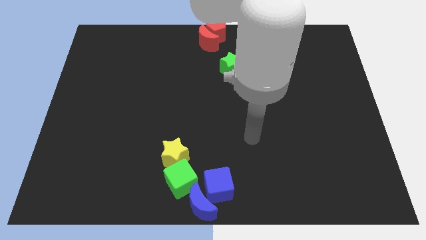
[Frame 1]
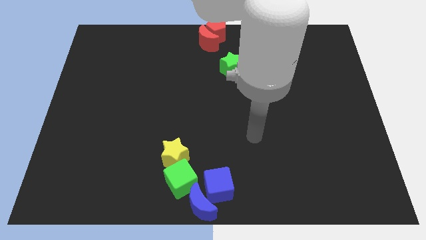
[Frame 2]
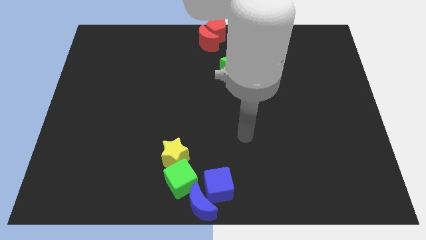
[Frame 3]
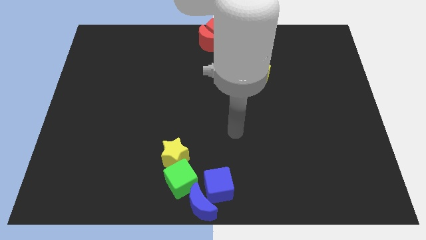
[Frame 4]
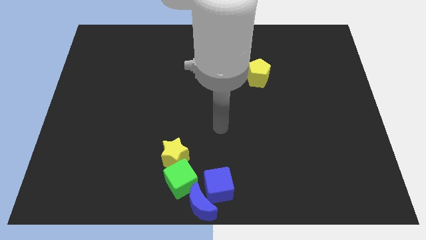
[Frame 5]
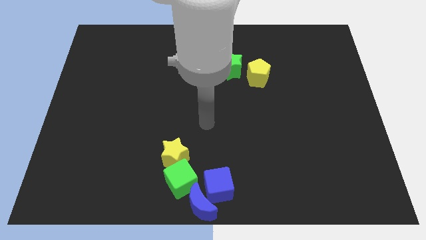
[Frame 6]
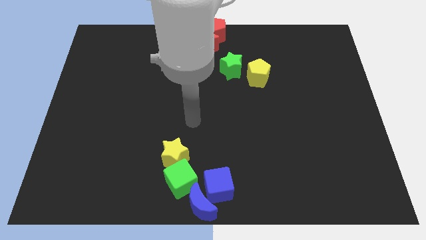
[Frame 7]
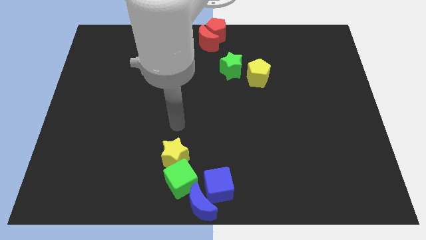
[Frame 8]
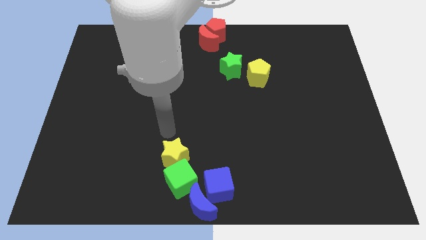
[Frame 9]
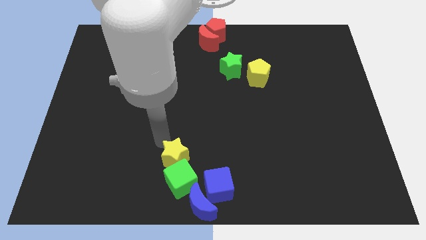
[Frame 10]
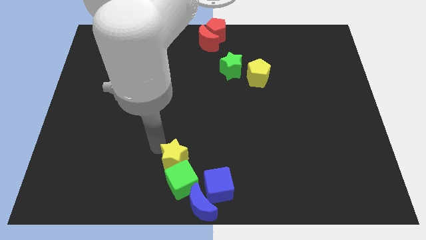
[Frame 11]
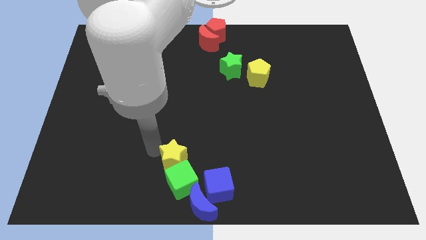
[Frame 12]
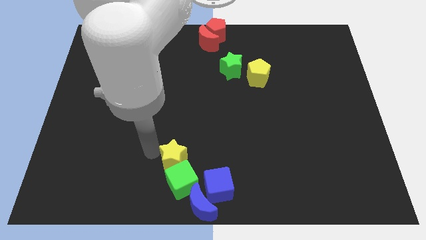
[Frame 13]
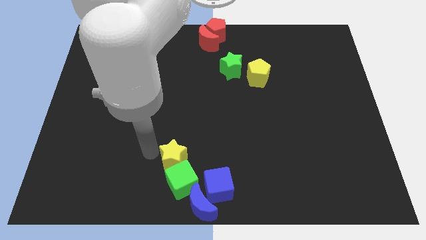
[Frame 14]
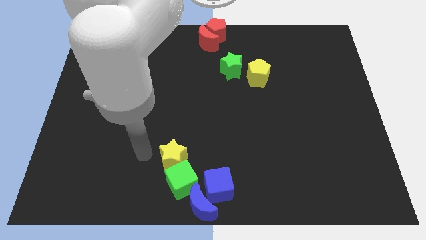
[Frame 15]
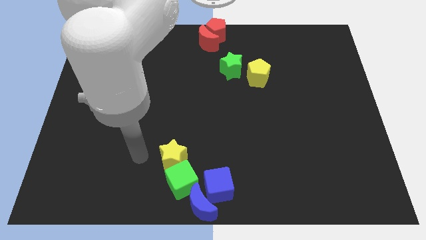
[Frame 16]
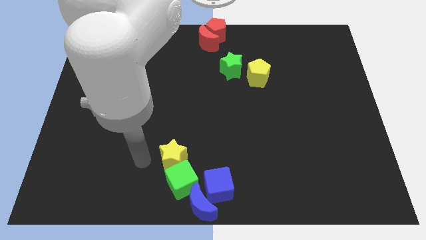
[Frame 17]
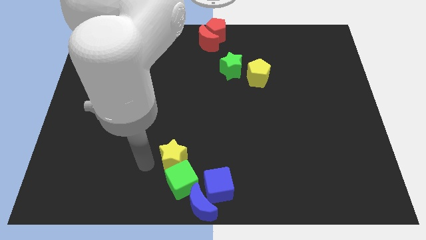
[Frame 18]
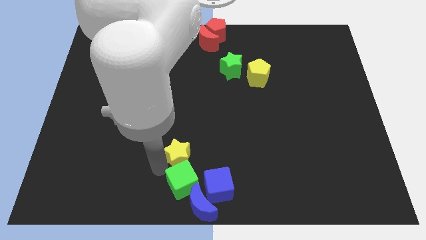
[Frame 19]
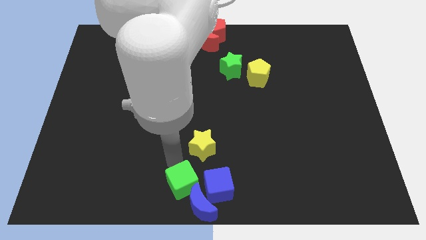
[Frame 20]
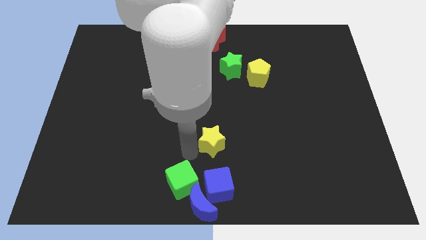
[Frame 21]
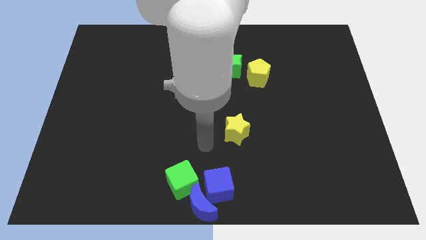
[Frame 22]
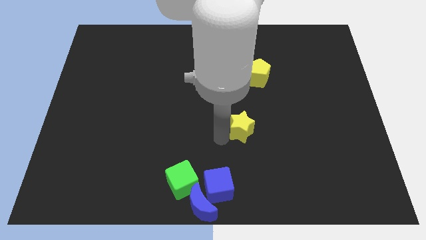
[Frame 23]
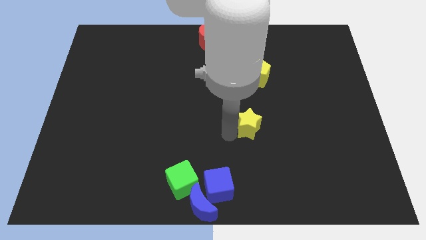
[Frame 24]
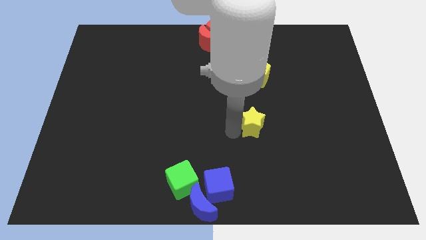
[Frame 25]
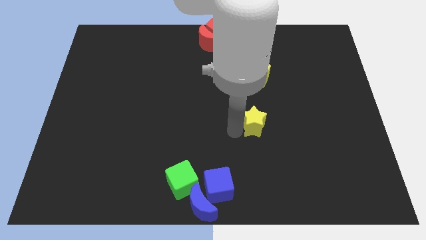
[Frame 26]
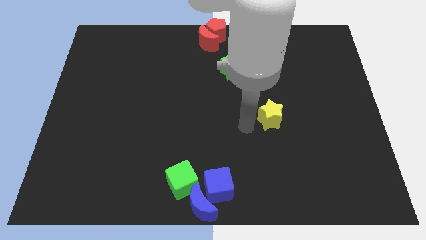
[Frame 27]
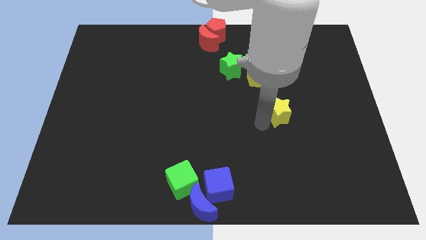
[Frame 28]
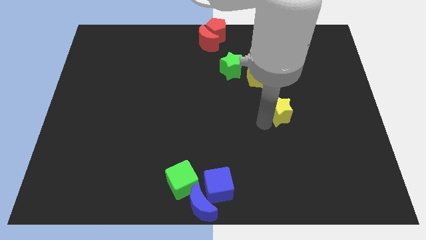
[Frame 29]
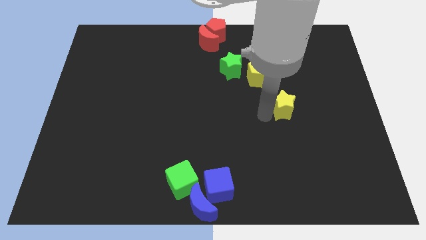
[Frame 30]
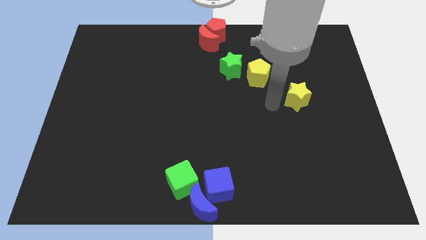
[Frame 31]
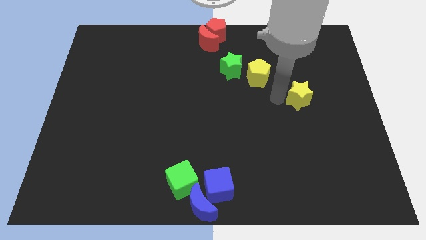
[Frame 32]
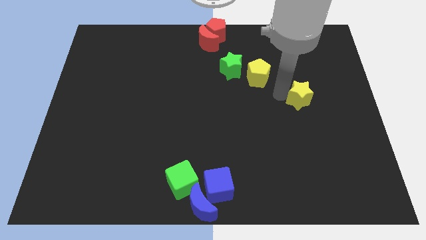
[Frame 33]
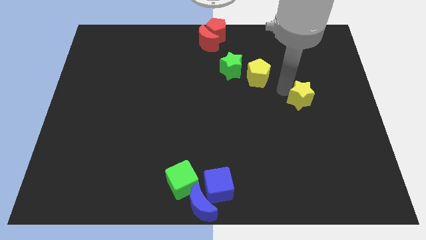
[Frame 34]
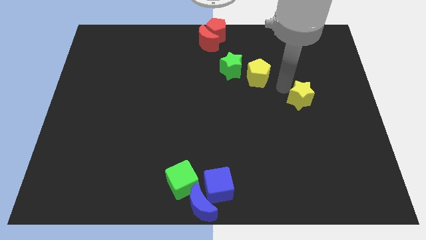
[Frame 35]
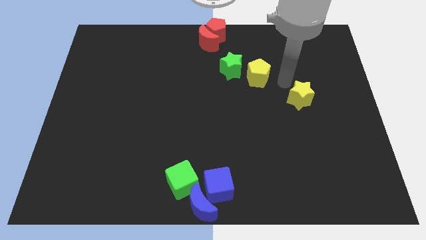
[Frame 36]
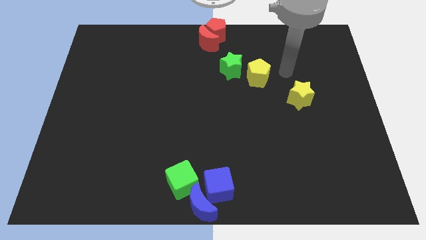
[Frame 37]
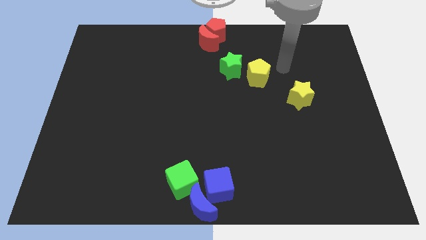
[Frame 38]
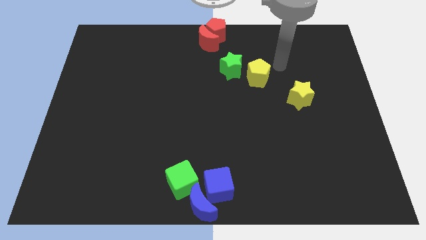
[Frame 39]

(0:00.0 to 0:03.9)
move the yellow star diagonal to the yellow pentagon

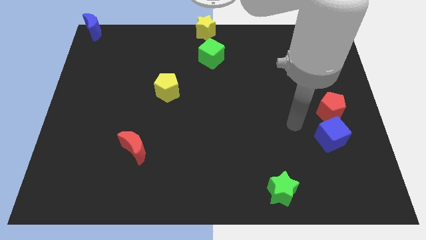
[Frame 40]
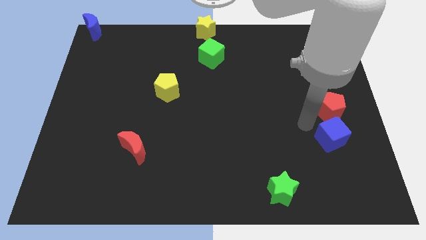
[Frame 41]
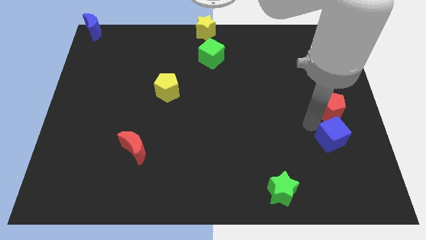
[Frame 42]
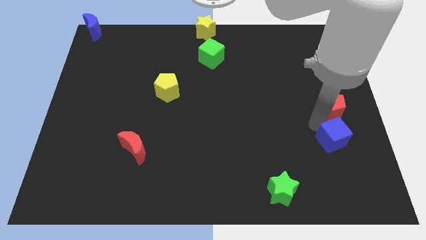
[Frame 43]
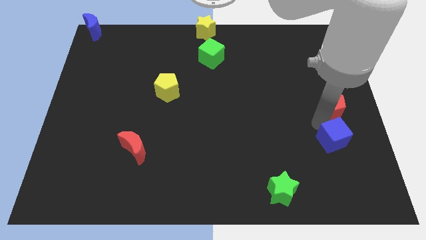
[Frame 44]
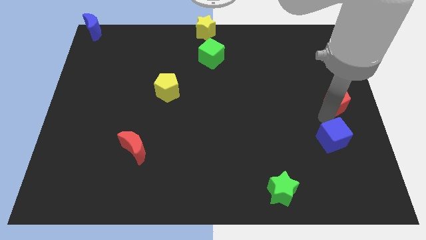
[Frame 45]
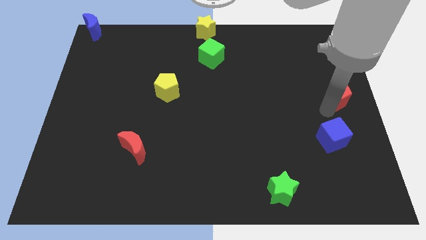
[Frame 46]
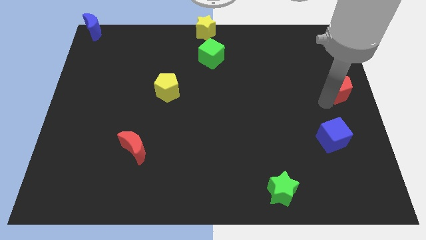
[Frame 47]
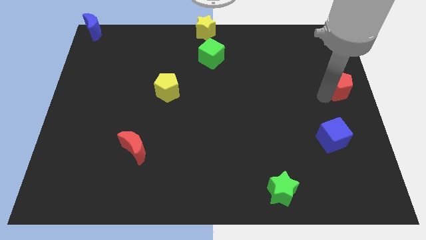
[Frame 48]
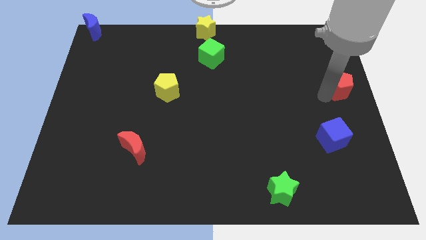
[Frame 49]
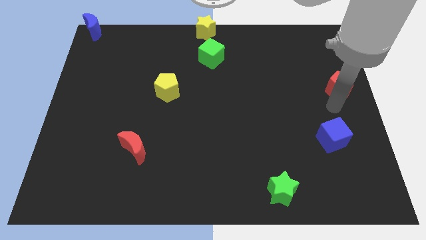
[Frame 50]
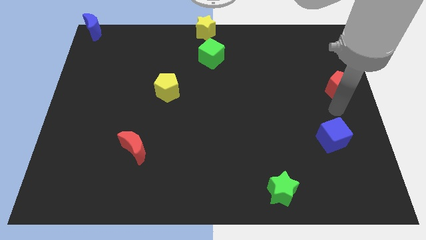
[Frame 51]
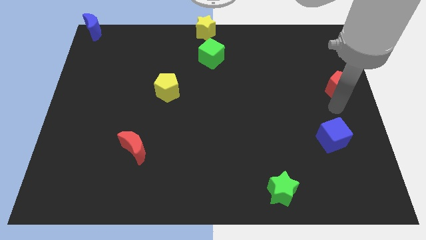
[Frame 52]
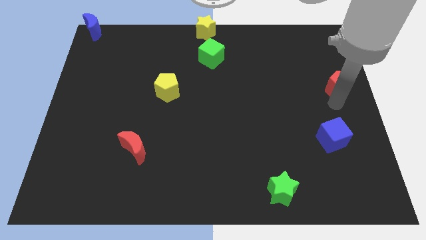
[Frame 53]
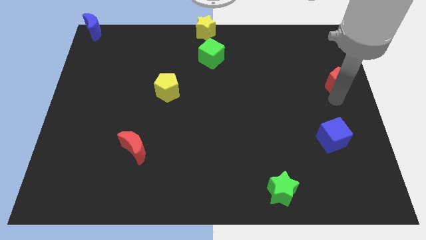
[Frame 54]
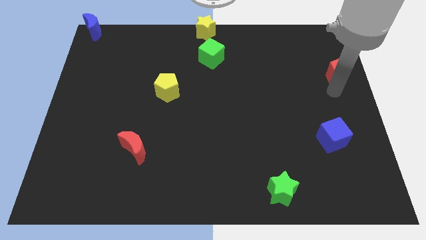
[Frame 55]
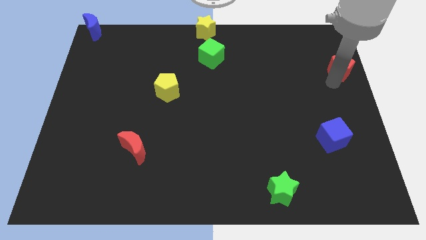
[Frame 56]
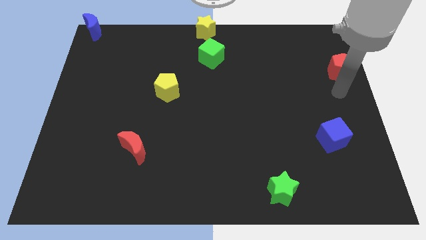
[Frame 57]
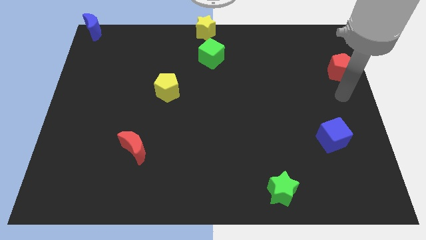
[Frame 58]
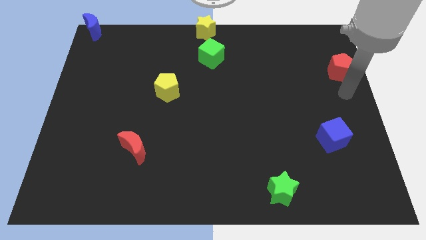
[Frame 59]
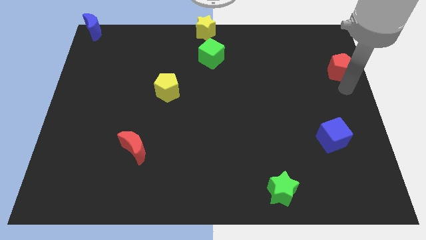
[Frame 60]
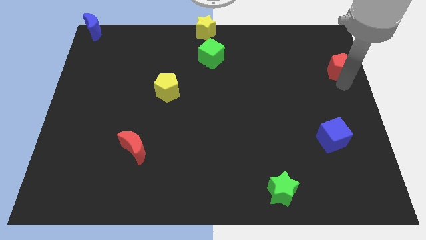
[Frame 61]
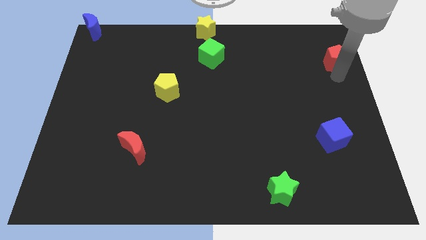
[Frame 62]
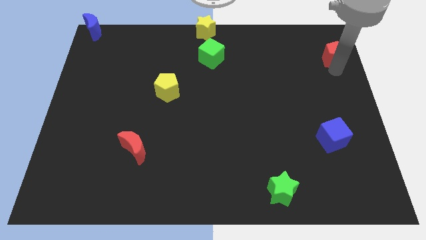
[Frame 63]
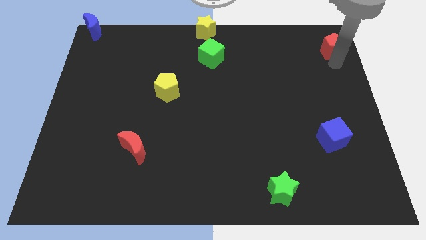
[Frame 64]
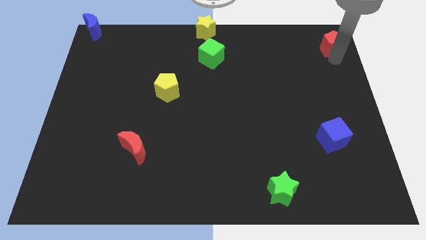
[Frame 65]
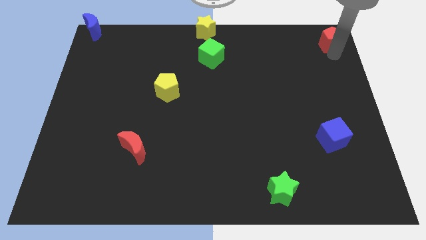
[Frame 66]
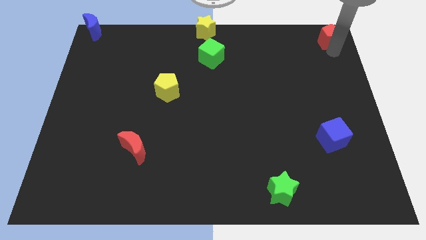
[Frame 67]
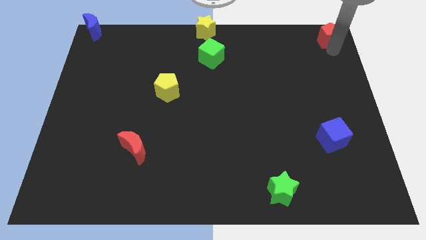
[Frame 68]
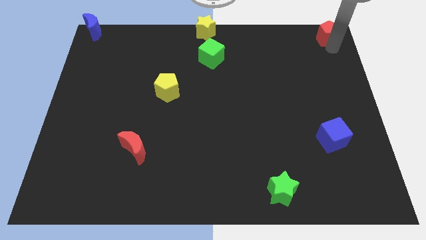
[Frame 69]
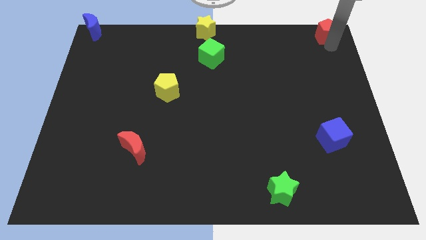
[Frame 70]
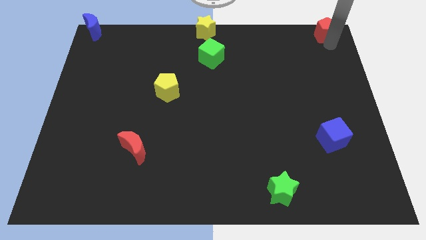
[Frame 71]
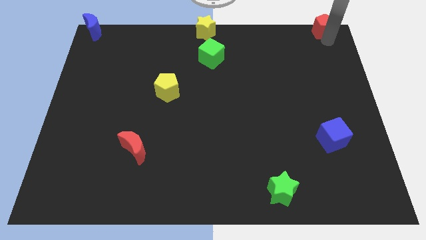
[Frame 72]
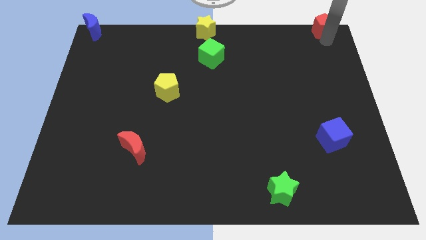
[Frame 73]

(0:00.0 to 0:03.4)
push the red pentagon to top right corner

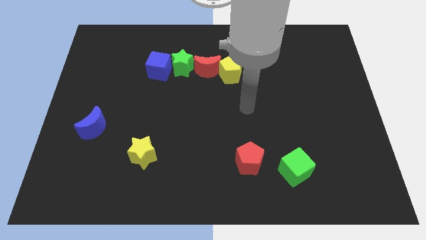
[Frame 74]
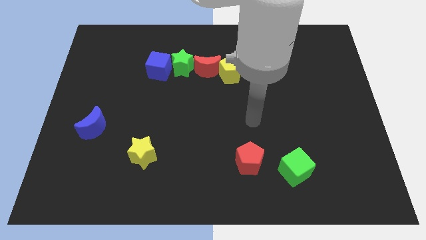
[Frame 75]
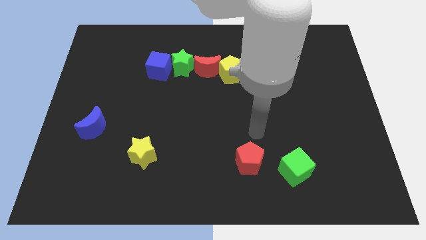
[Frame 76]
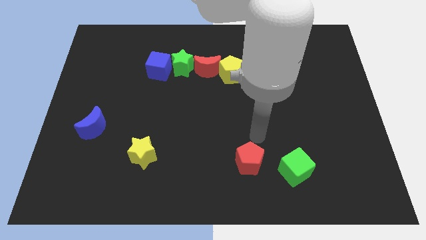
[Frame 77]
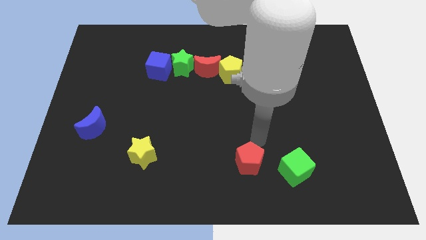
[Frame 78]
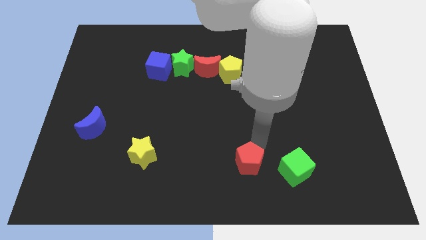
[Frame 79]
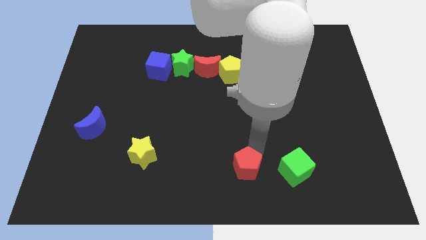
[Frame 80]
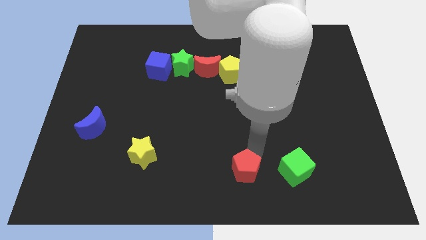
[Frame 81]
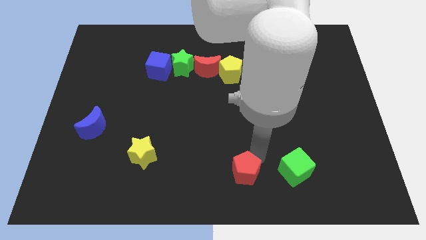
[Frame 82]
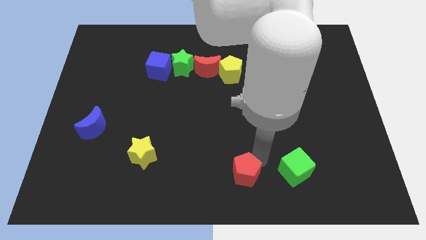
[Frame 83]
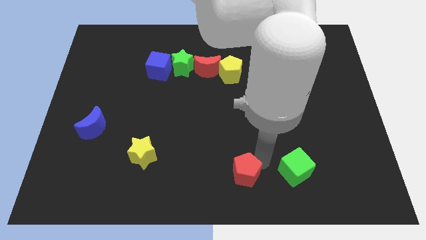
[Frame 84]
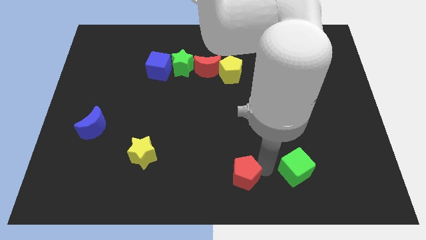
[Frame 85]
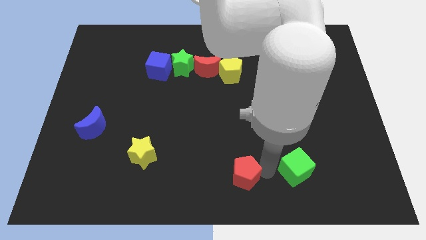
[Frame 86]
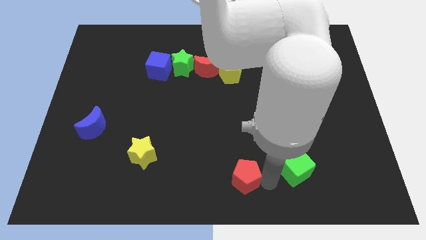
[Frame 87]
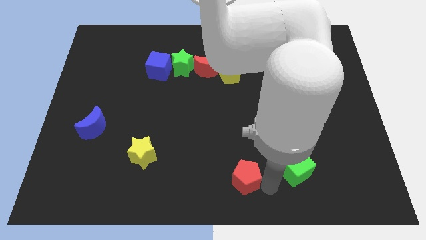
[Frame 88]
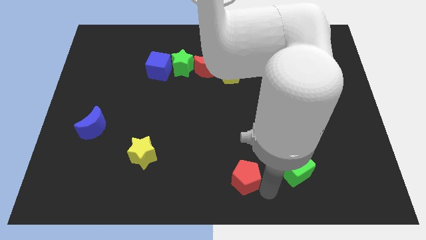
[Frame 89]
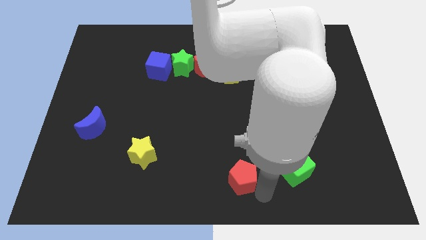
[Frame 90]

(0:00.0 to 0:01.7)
push the red pentagon to the left of the green cube
